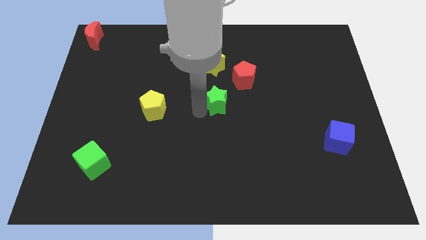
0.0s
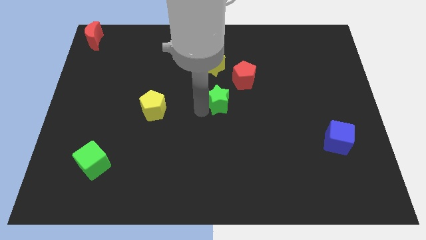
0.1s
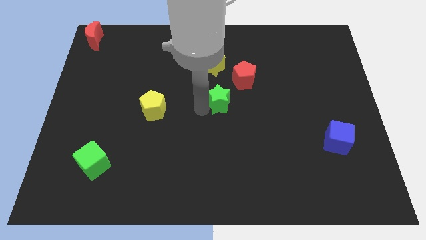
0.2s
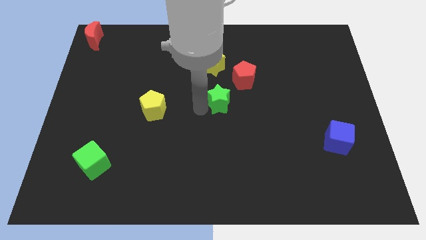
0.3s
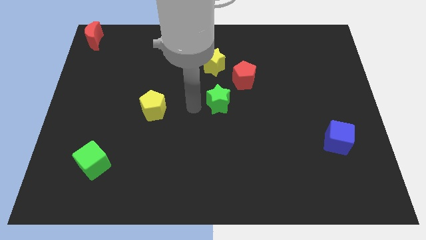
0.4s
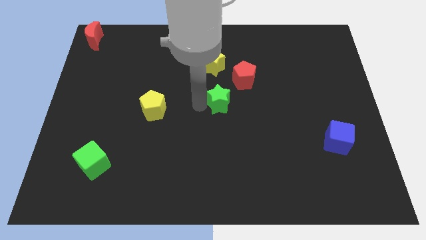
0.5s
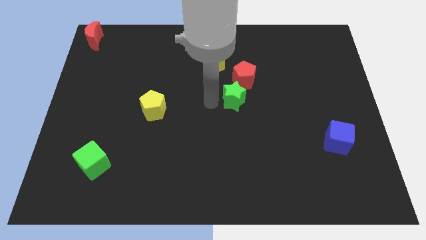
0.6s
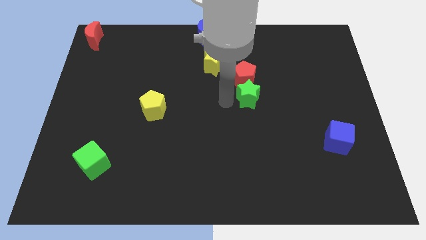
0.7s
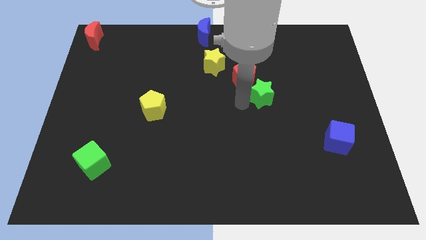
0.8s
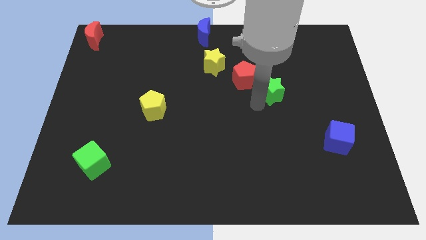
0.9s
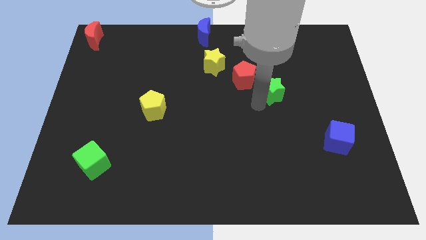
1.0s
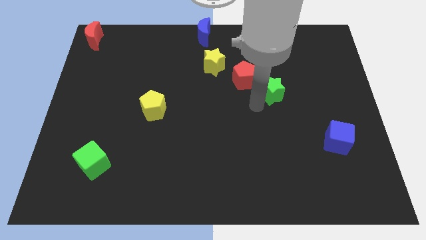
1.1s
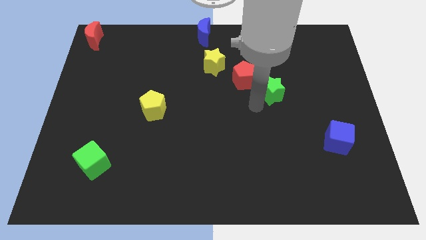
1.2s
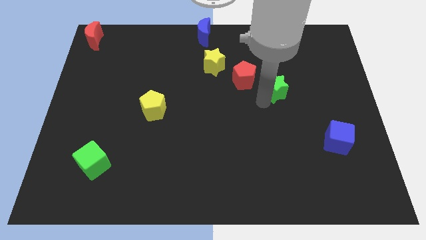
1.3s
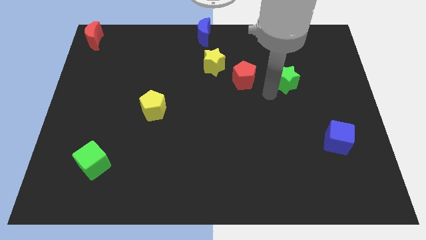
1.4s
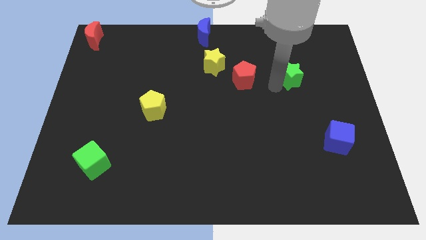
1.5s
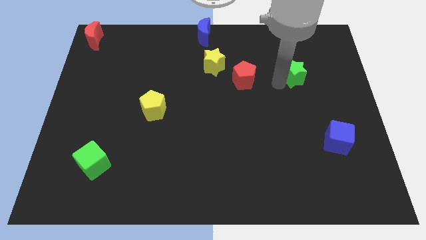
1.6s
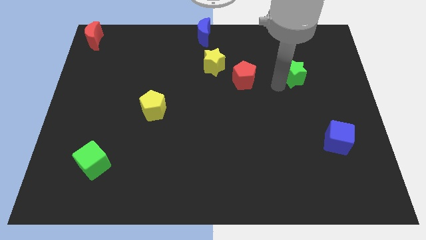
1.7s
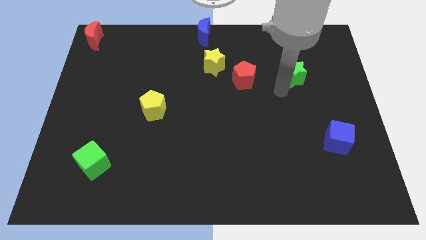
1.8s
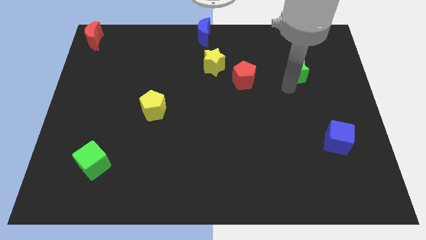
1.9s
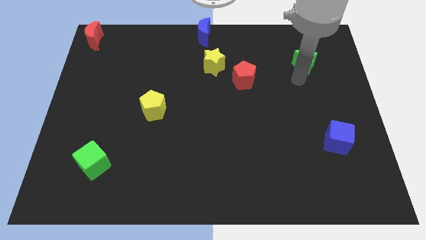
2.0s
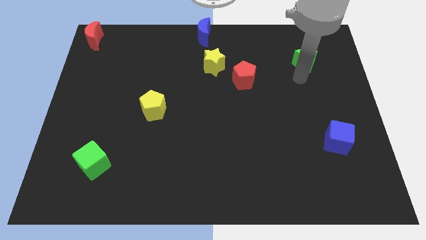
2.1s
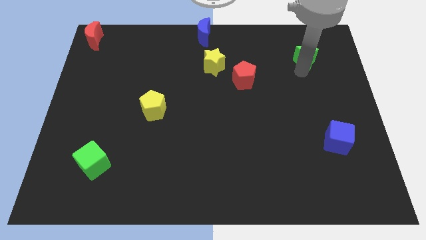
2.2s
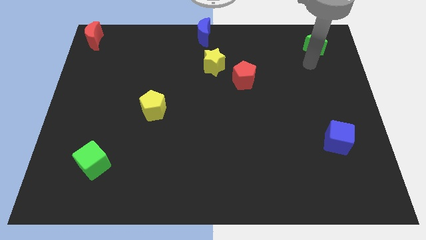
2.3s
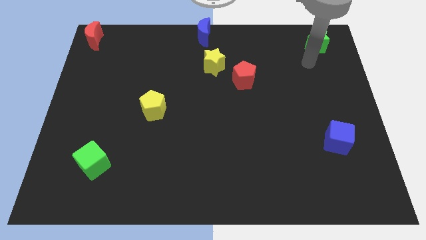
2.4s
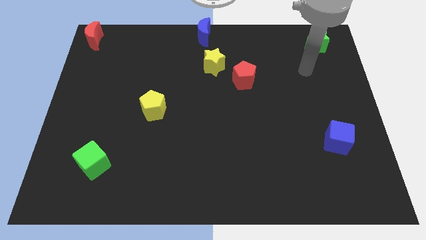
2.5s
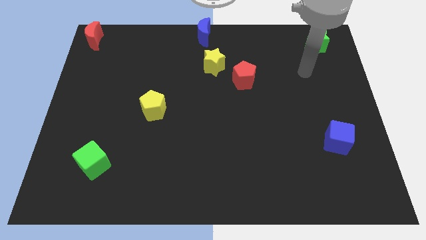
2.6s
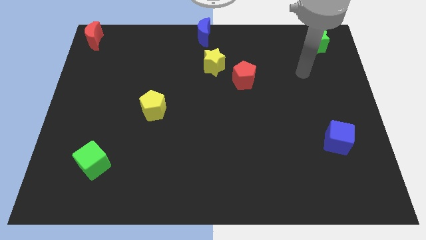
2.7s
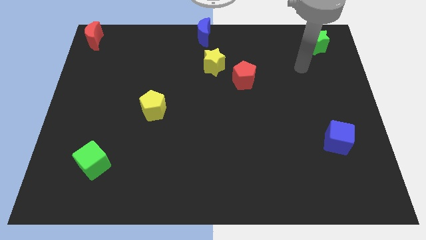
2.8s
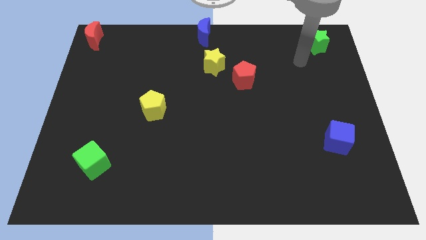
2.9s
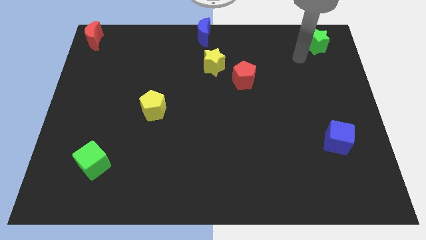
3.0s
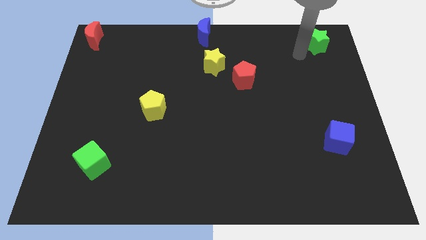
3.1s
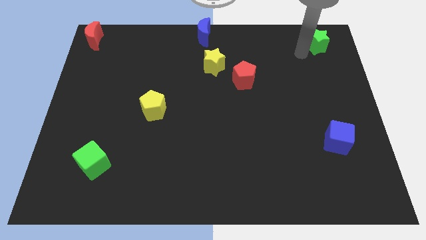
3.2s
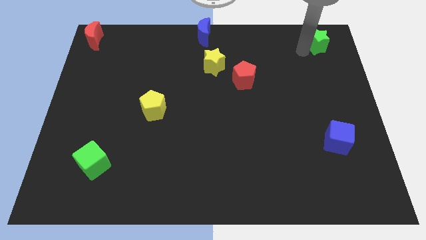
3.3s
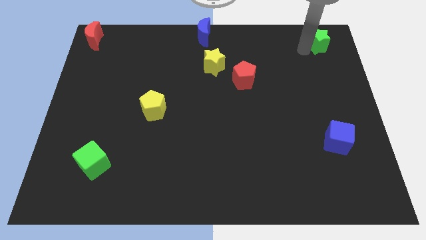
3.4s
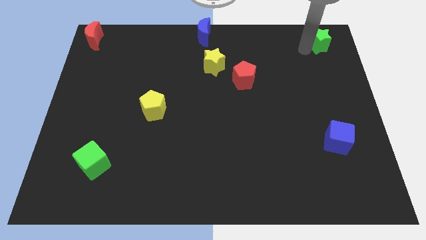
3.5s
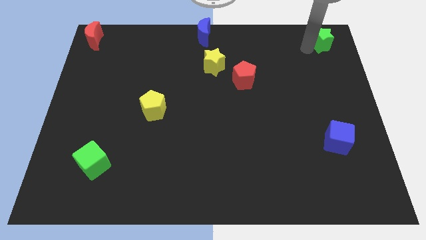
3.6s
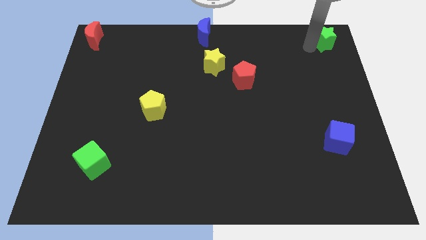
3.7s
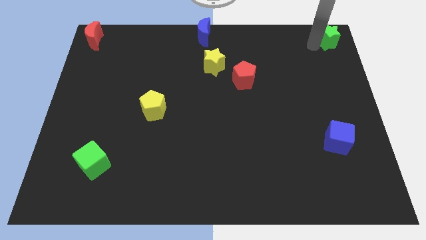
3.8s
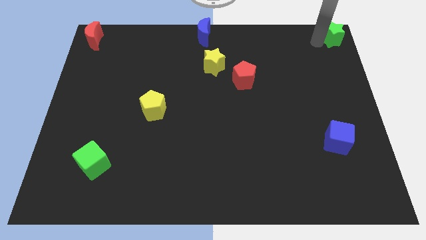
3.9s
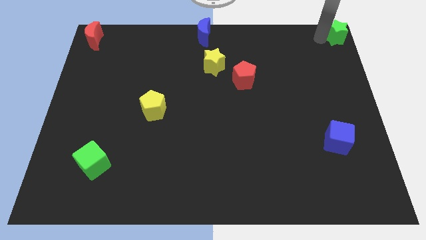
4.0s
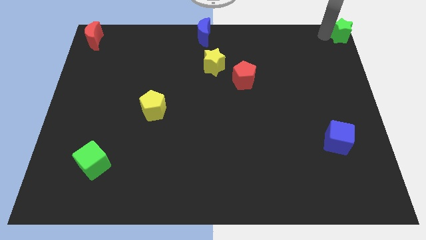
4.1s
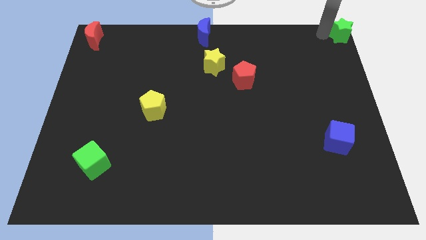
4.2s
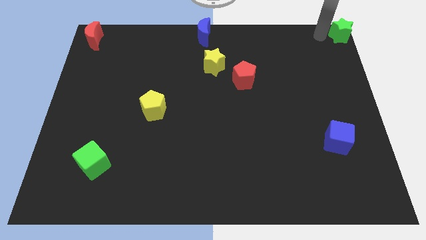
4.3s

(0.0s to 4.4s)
move the green star to the top right corner of the board

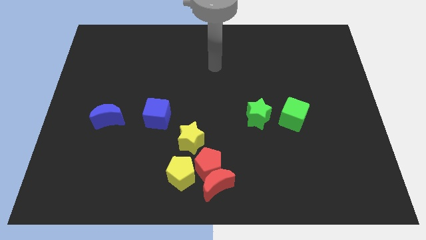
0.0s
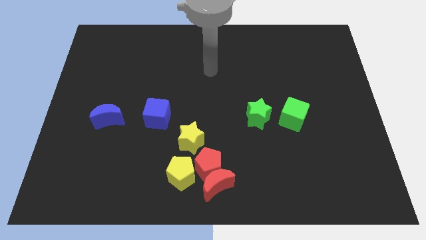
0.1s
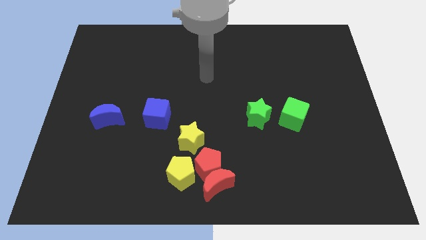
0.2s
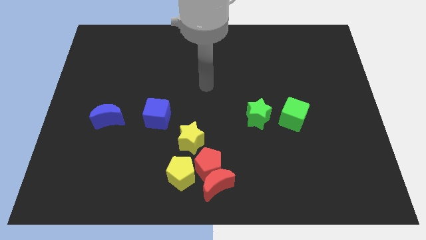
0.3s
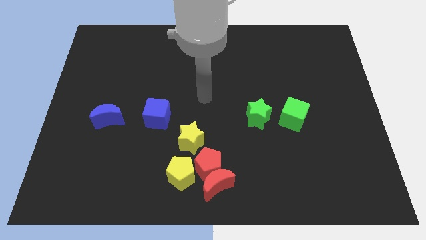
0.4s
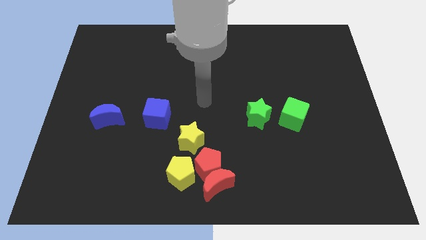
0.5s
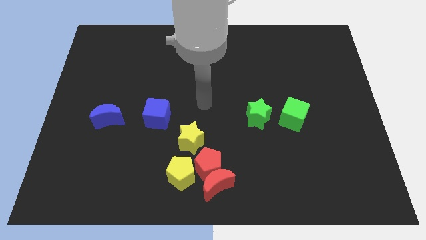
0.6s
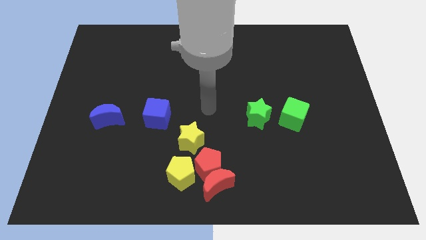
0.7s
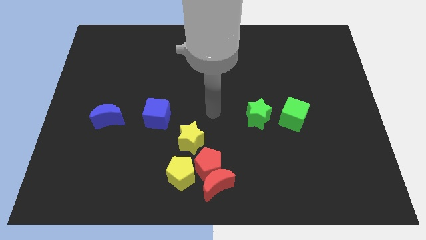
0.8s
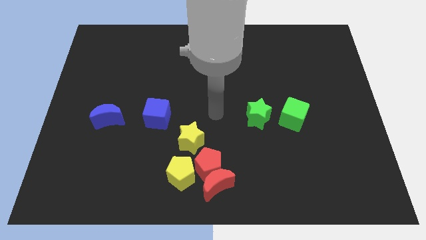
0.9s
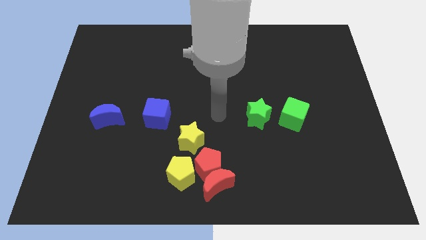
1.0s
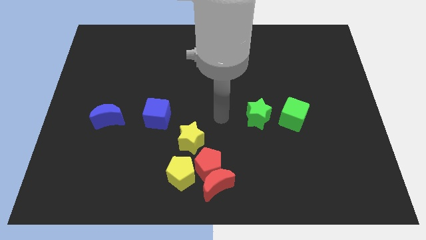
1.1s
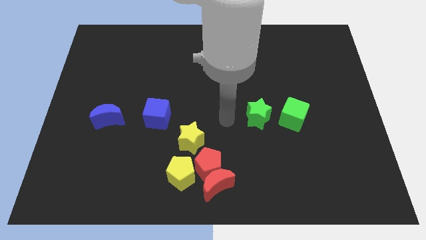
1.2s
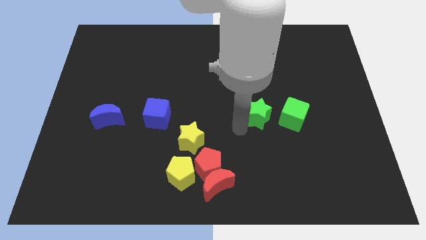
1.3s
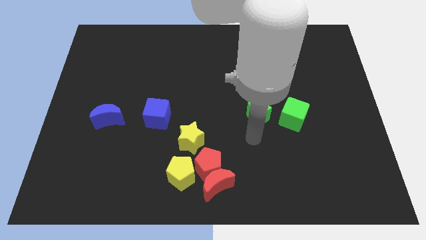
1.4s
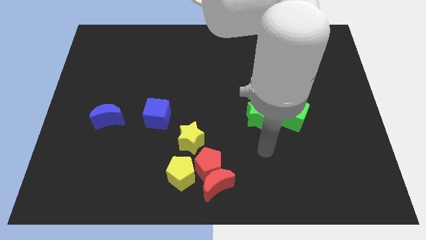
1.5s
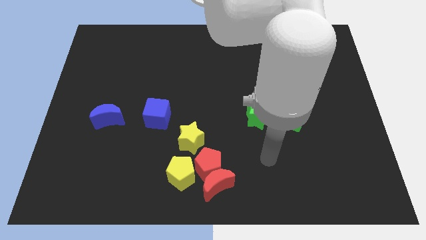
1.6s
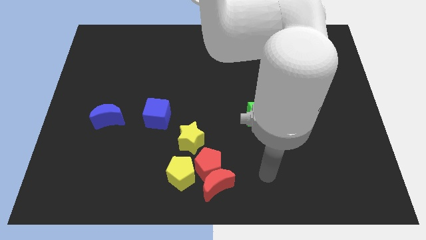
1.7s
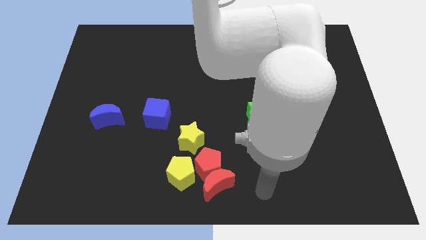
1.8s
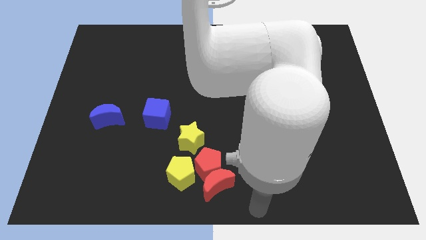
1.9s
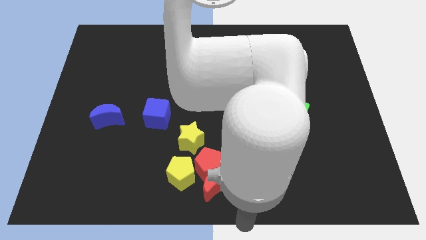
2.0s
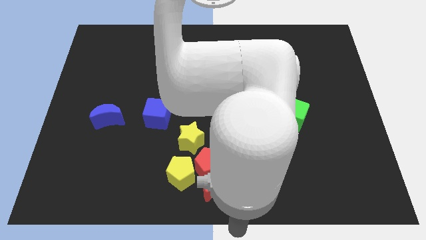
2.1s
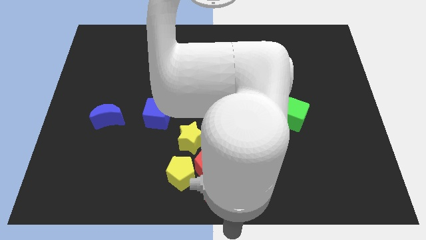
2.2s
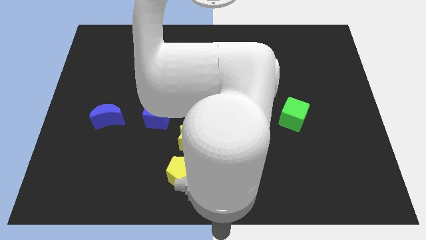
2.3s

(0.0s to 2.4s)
move your hand around a group of objects

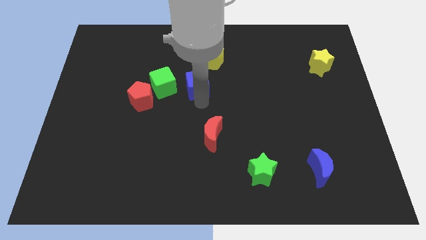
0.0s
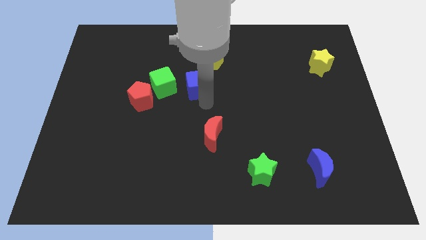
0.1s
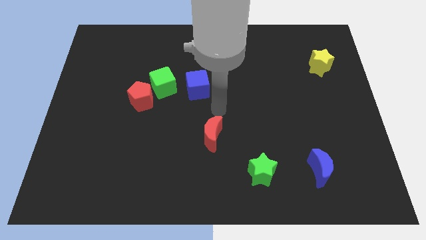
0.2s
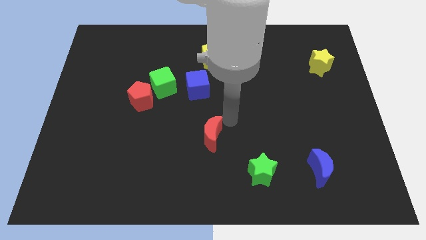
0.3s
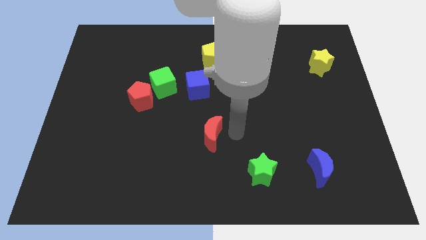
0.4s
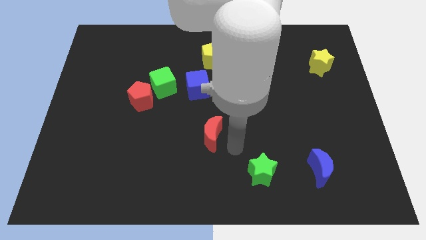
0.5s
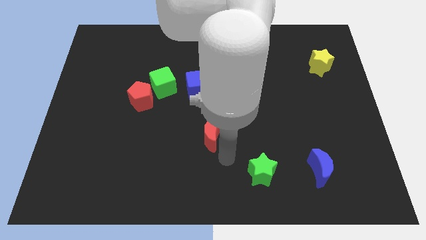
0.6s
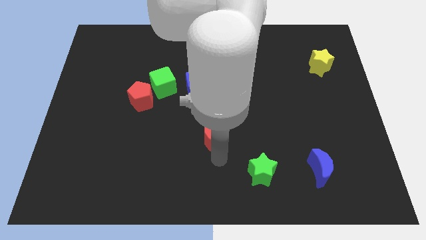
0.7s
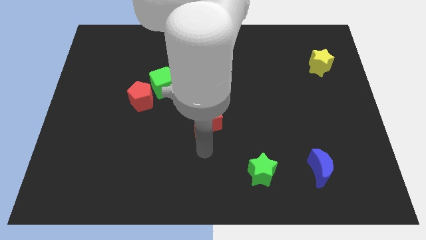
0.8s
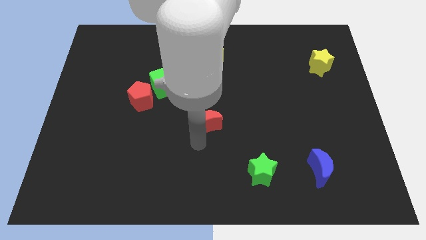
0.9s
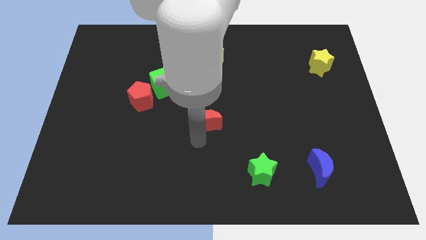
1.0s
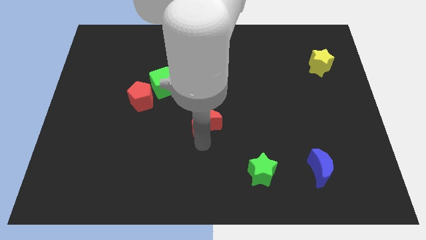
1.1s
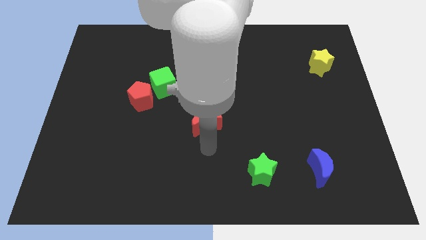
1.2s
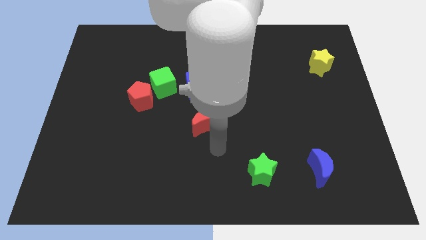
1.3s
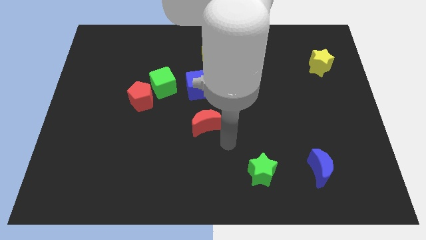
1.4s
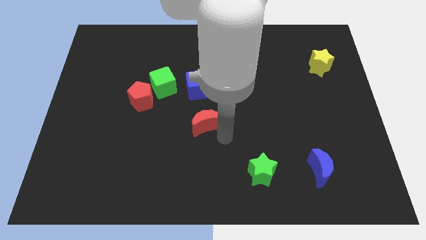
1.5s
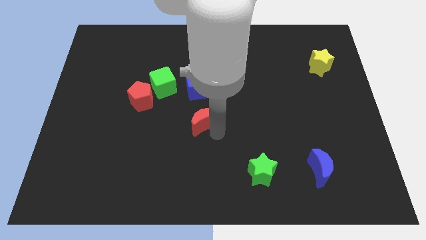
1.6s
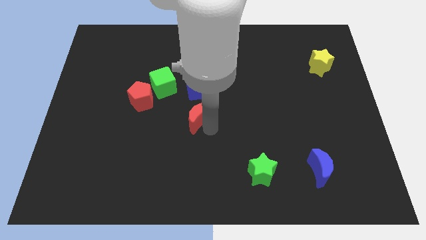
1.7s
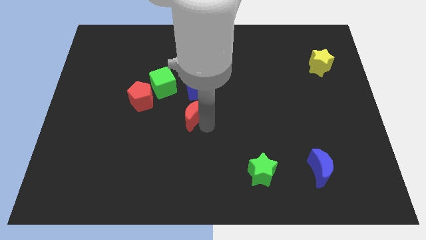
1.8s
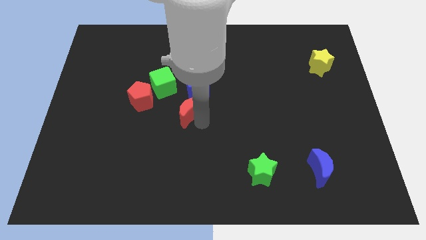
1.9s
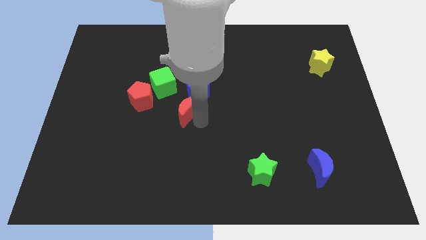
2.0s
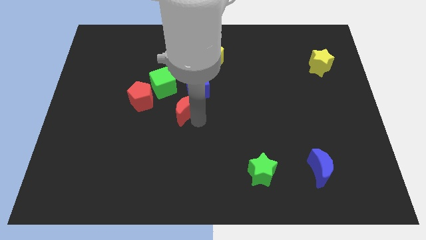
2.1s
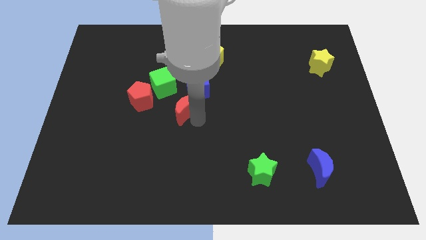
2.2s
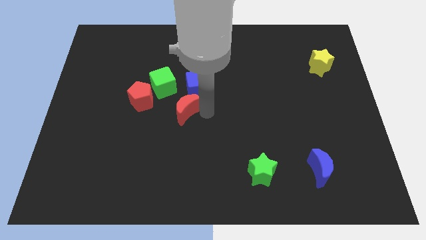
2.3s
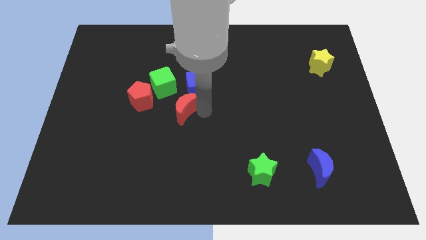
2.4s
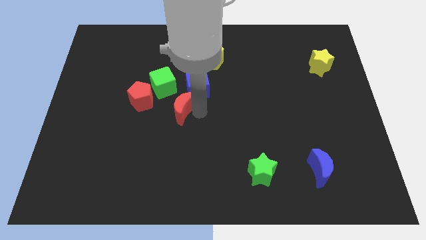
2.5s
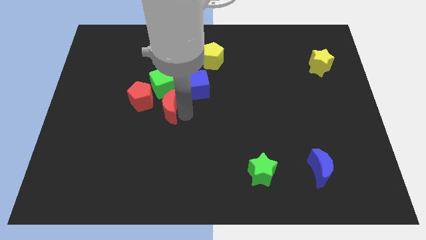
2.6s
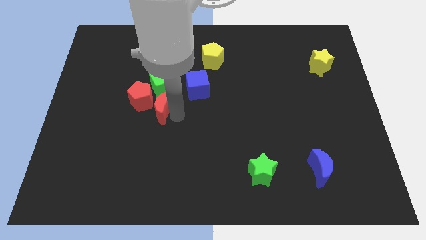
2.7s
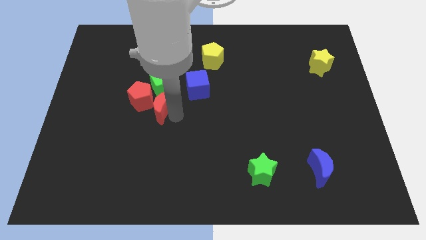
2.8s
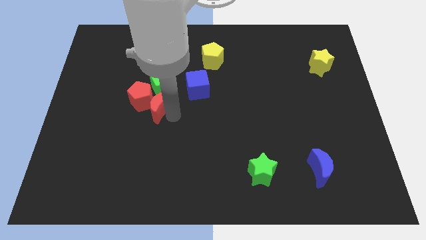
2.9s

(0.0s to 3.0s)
move the red moon below the green cube
